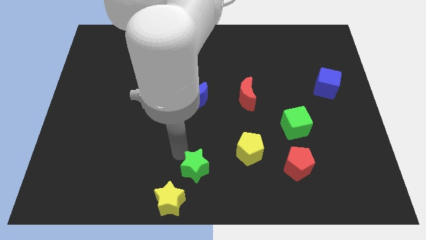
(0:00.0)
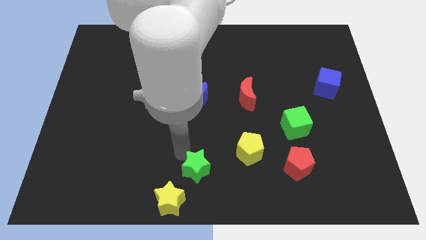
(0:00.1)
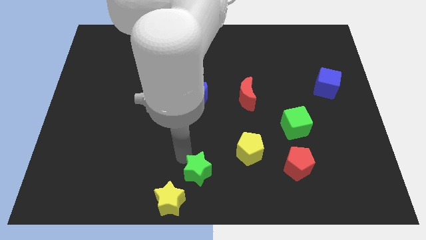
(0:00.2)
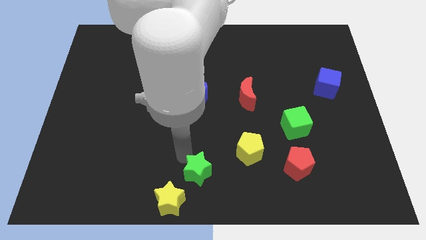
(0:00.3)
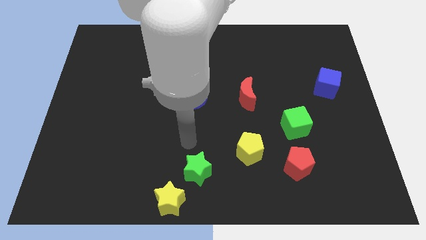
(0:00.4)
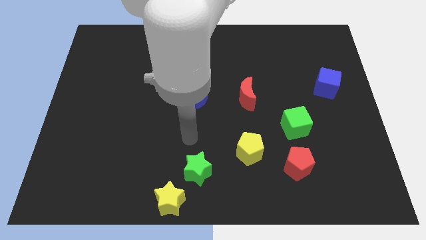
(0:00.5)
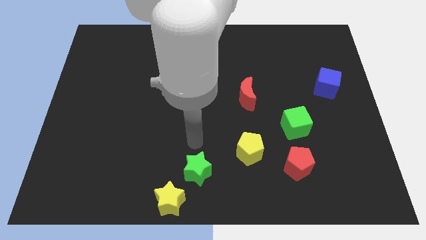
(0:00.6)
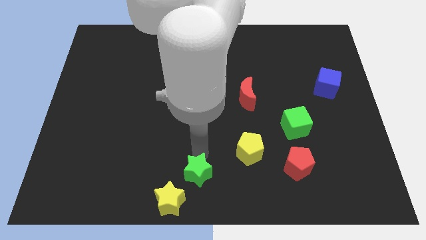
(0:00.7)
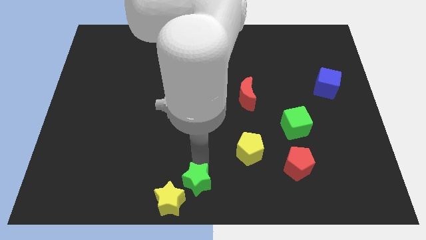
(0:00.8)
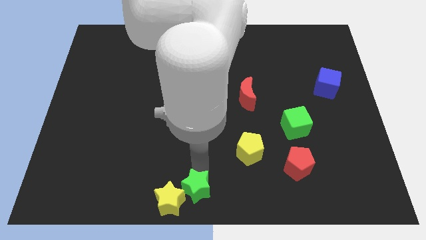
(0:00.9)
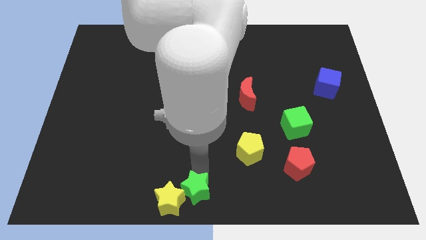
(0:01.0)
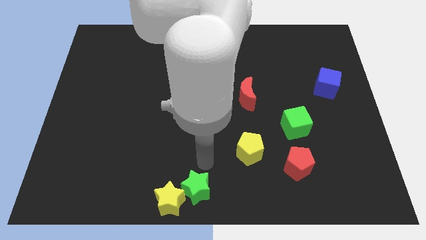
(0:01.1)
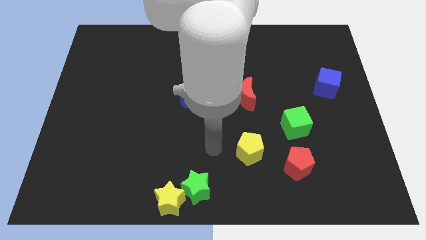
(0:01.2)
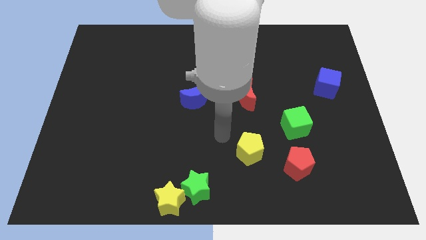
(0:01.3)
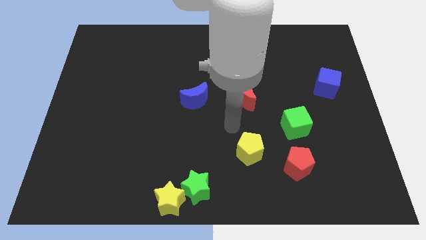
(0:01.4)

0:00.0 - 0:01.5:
push the green star slightly towards the yellow star on the bottom left of the board

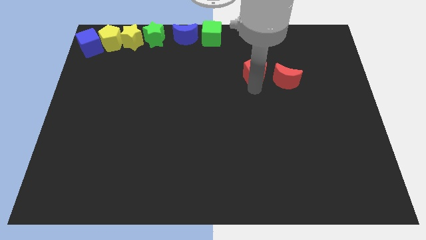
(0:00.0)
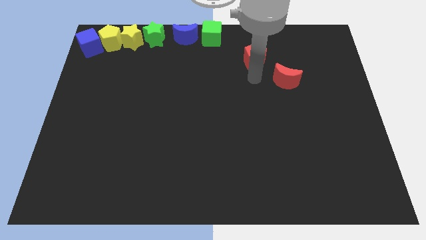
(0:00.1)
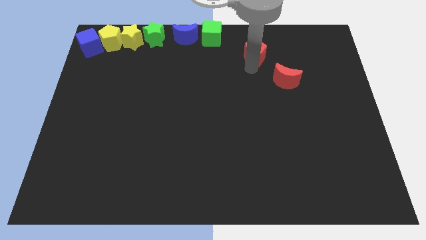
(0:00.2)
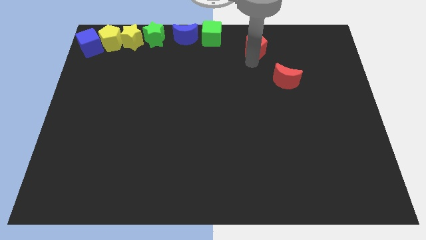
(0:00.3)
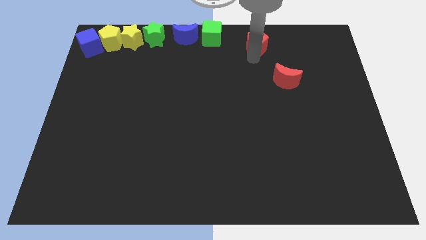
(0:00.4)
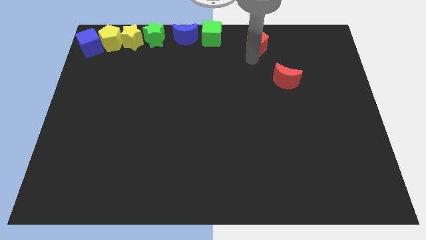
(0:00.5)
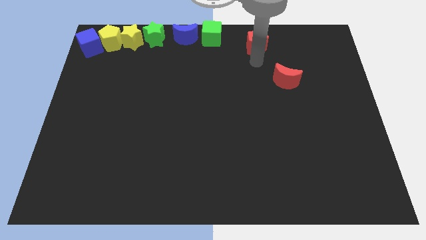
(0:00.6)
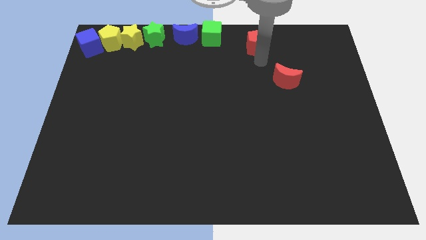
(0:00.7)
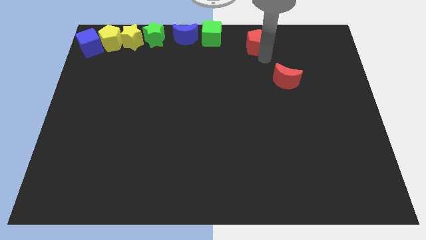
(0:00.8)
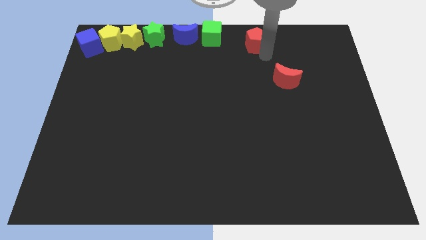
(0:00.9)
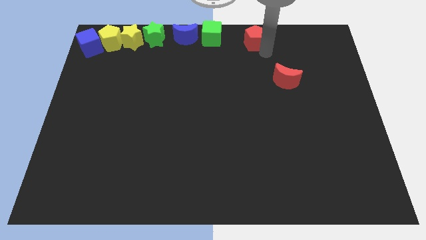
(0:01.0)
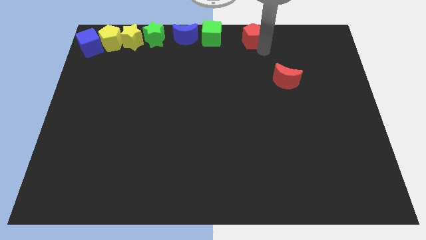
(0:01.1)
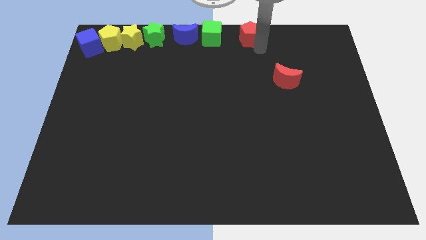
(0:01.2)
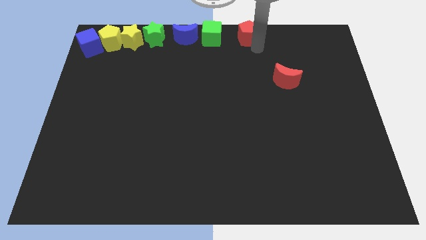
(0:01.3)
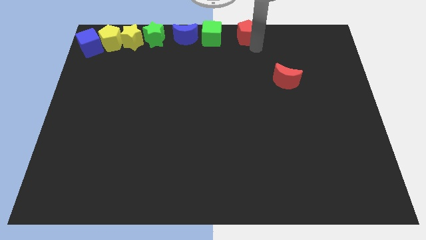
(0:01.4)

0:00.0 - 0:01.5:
place the red pentagon to the right of the green cube

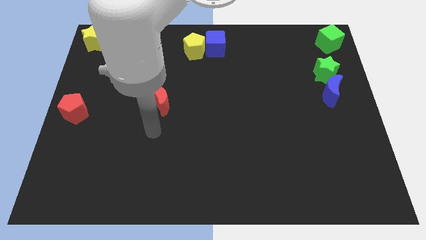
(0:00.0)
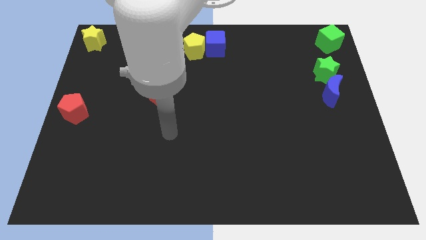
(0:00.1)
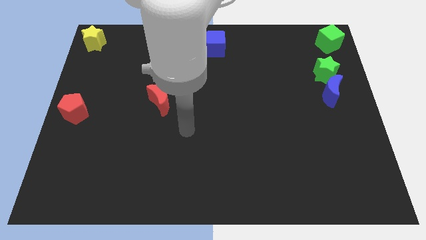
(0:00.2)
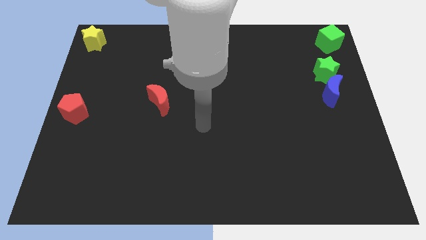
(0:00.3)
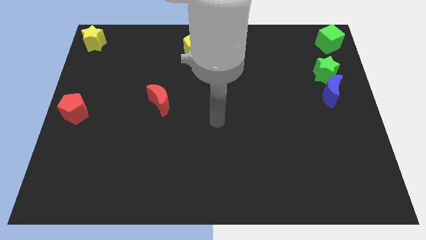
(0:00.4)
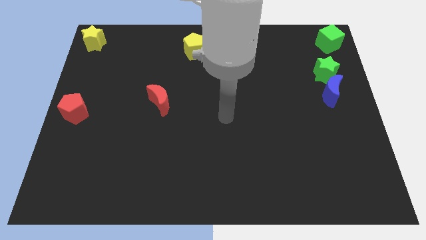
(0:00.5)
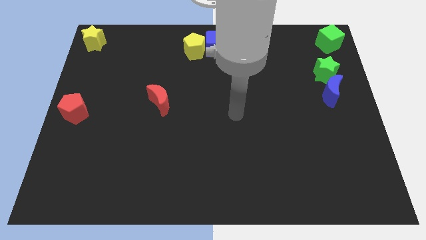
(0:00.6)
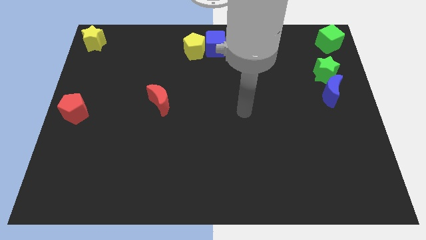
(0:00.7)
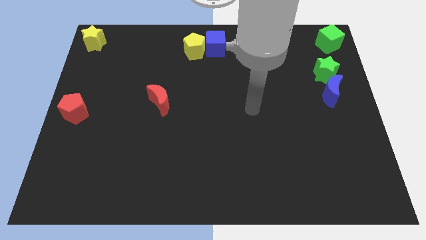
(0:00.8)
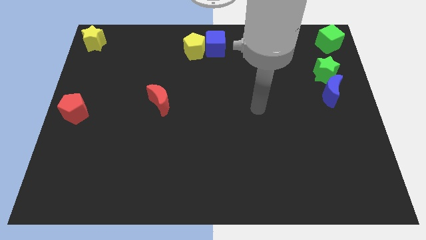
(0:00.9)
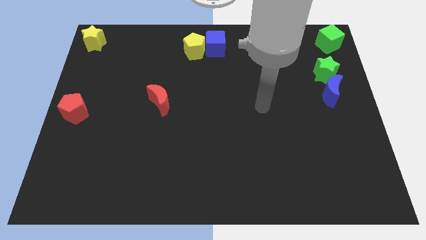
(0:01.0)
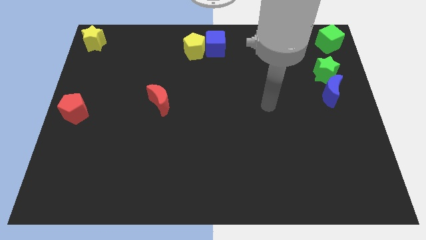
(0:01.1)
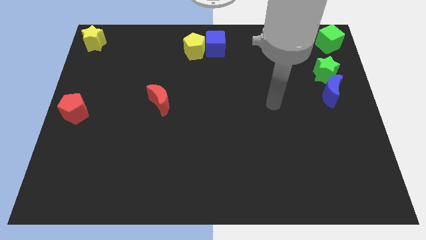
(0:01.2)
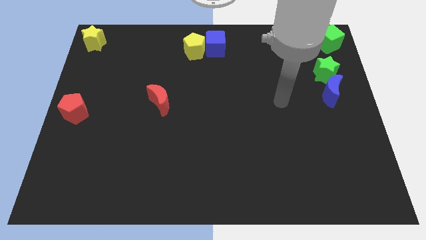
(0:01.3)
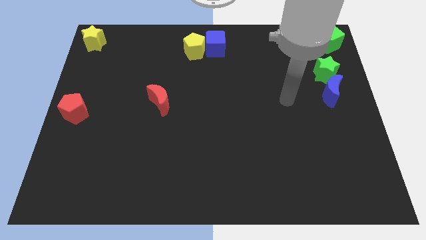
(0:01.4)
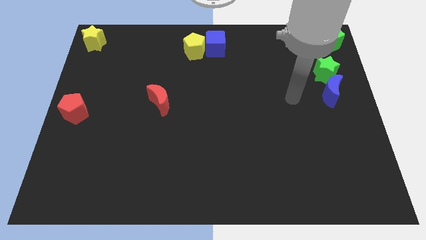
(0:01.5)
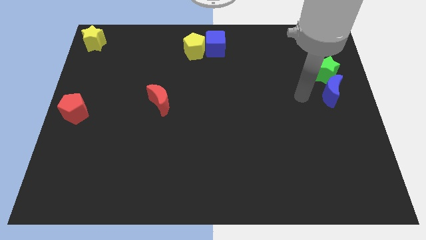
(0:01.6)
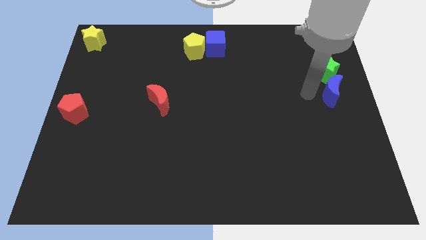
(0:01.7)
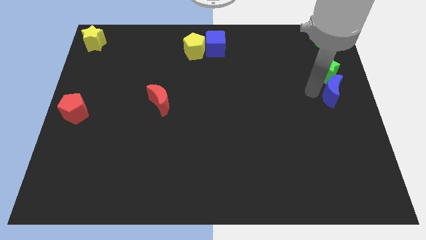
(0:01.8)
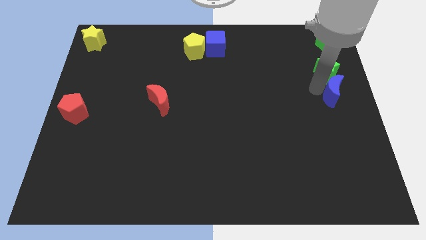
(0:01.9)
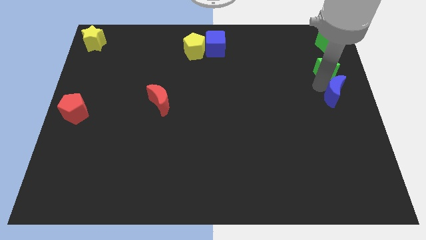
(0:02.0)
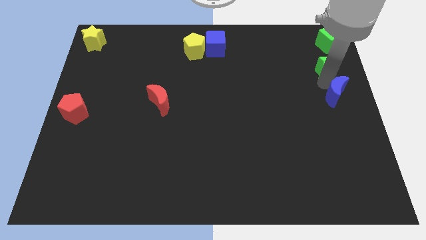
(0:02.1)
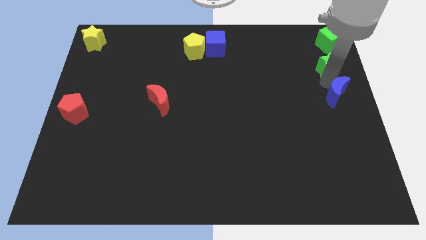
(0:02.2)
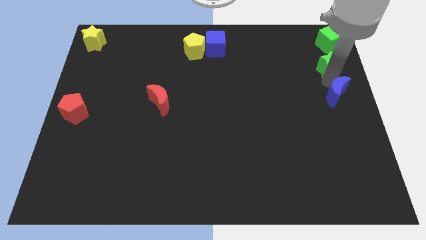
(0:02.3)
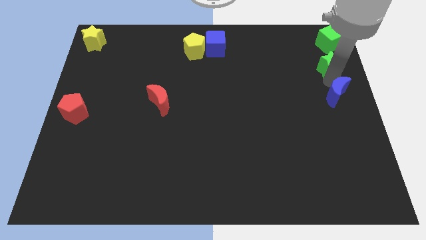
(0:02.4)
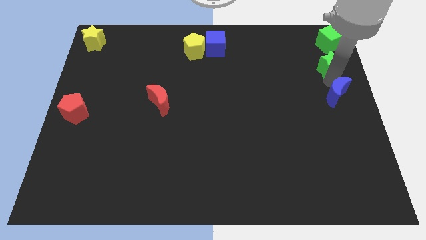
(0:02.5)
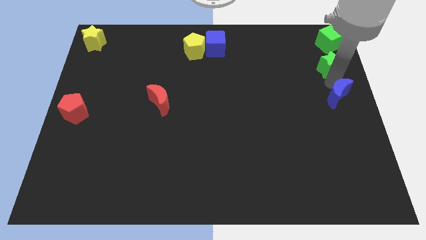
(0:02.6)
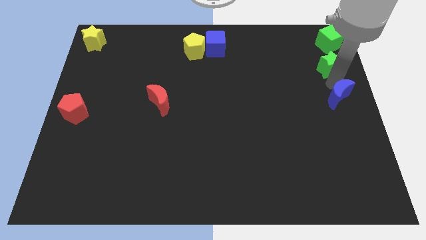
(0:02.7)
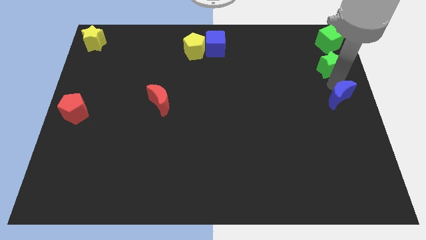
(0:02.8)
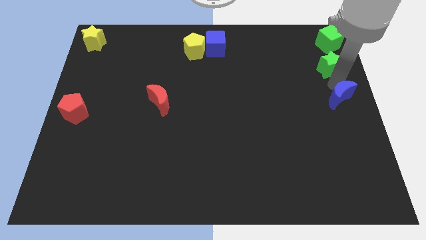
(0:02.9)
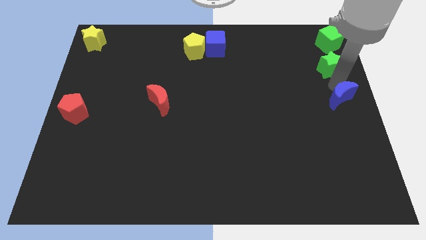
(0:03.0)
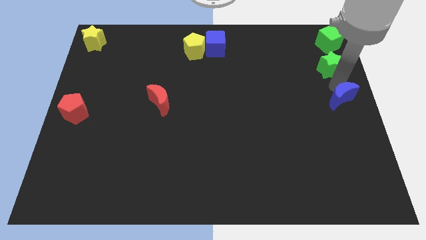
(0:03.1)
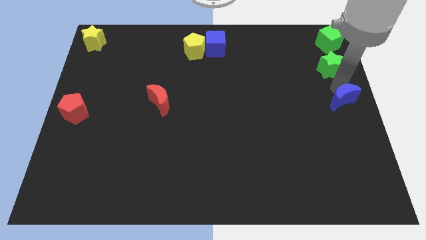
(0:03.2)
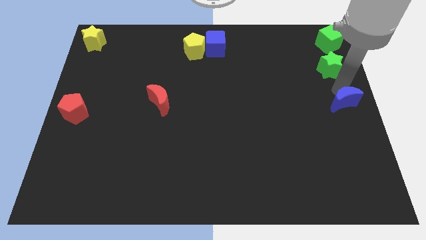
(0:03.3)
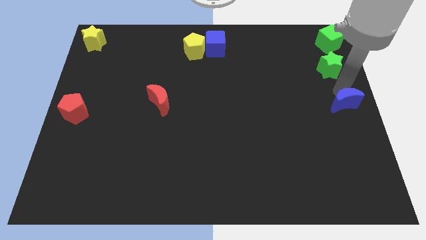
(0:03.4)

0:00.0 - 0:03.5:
move arm near blue moon

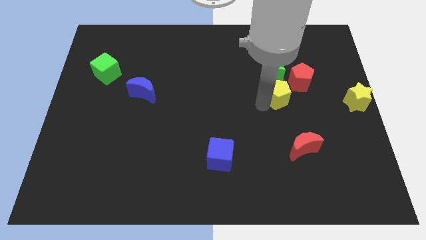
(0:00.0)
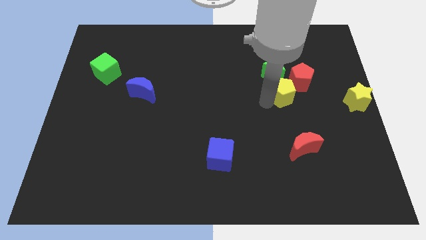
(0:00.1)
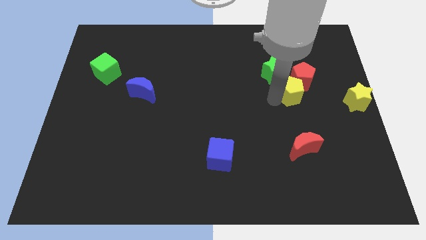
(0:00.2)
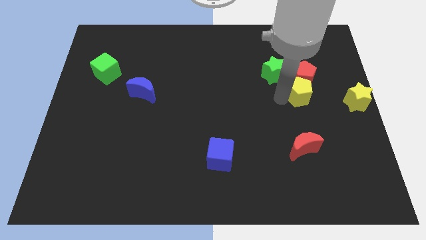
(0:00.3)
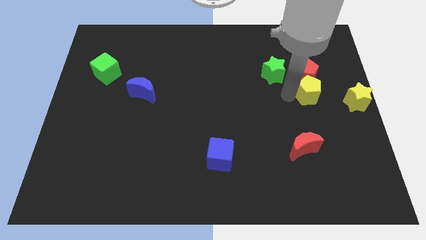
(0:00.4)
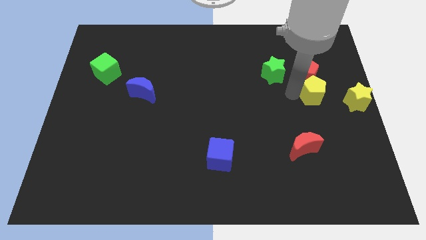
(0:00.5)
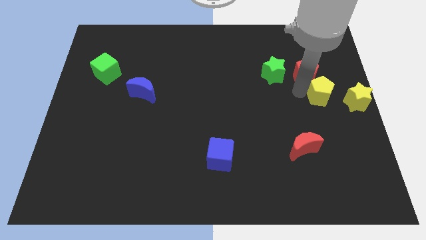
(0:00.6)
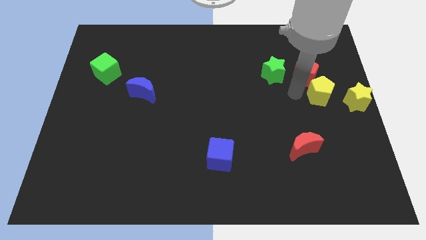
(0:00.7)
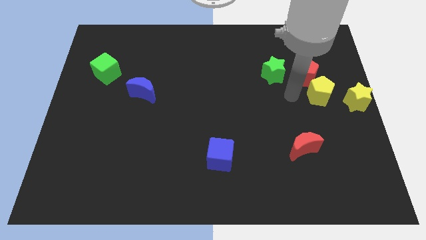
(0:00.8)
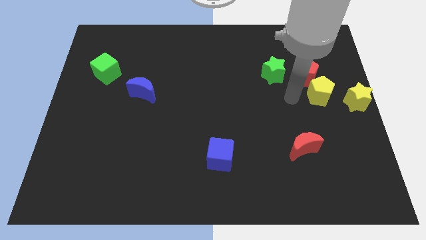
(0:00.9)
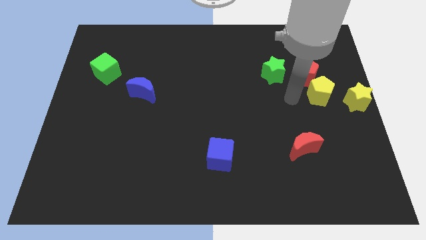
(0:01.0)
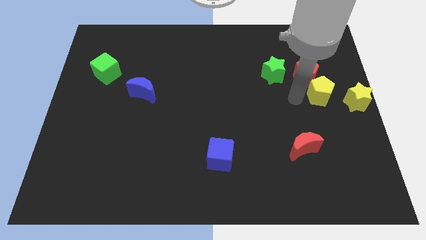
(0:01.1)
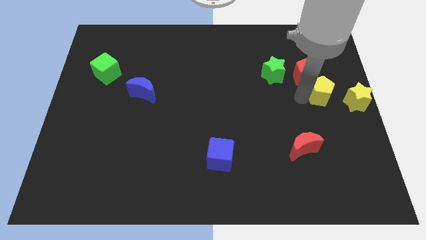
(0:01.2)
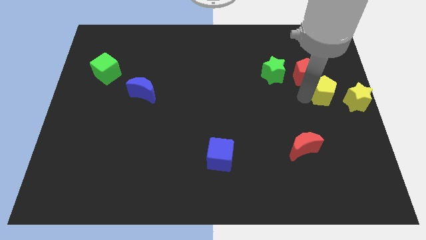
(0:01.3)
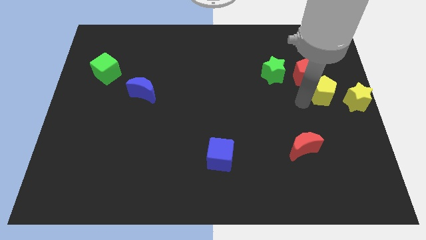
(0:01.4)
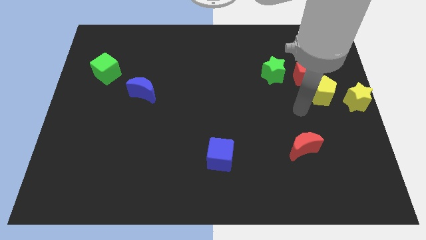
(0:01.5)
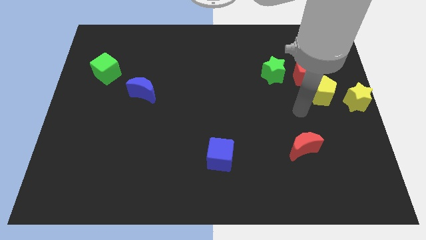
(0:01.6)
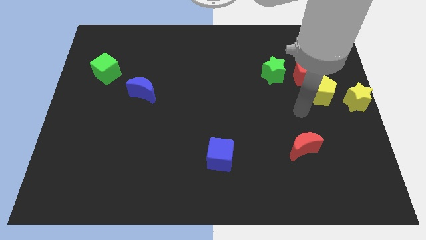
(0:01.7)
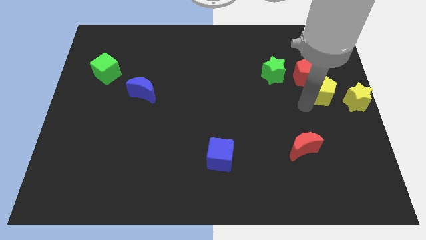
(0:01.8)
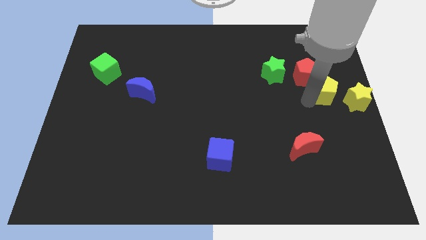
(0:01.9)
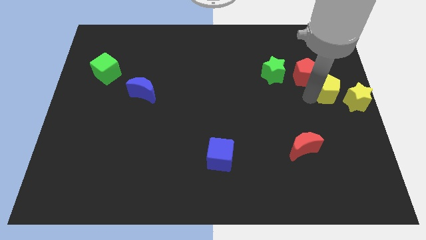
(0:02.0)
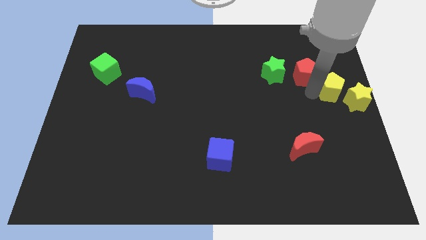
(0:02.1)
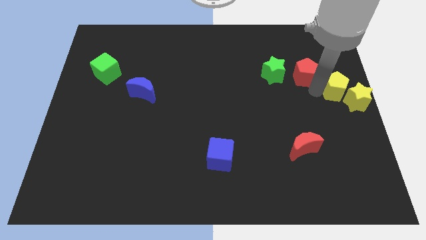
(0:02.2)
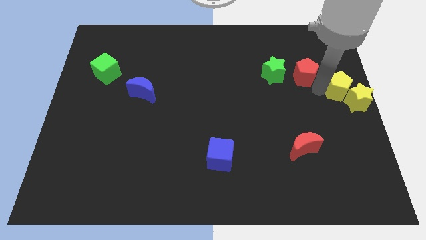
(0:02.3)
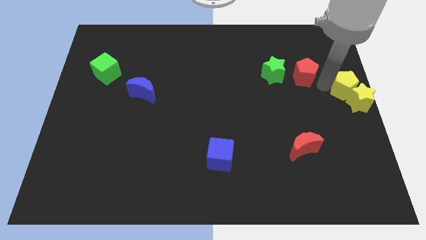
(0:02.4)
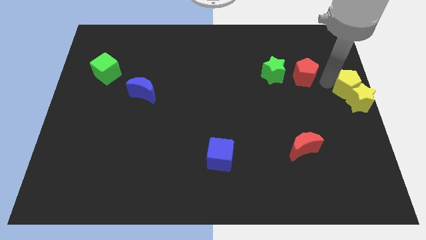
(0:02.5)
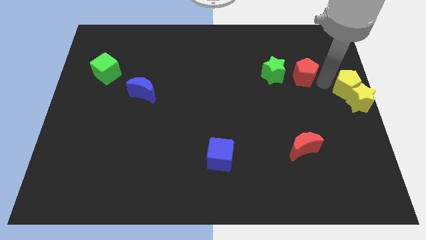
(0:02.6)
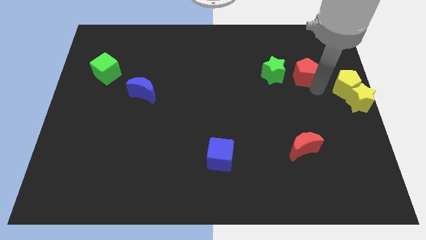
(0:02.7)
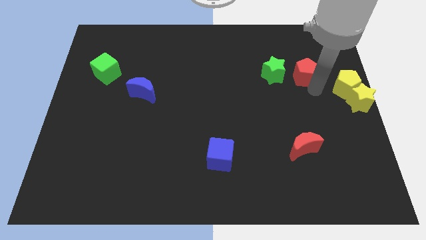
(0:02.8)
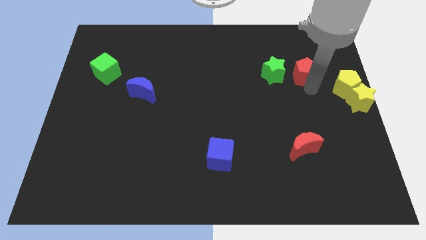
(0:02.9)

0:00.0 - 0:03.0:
move yellow pentagon diagonally top left to the yellow star
